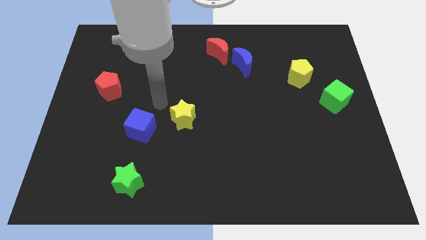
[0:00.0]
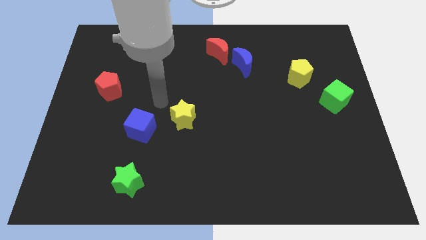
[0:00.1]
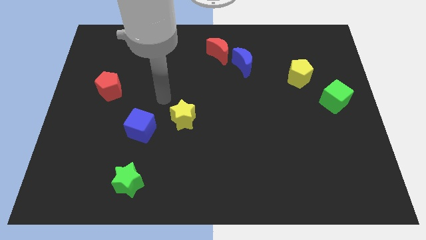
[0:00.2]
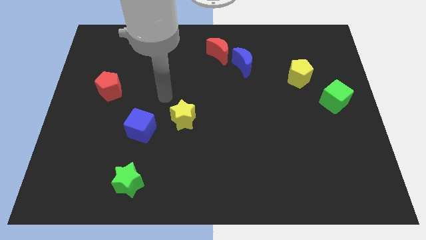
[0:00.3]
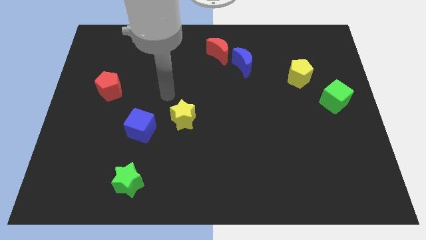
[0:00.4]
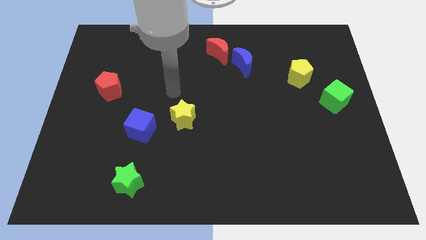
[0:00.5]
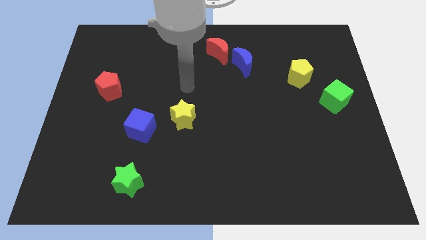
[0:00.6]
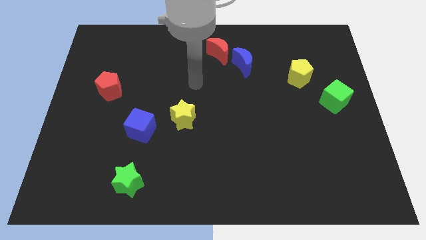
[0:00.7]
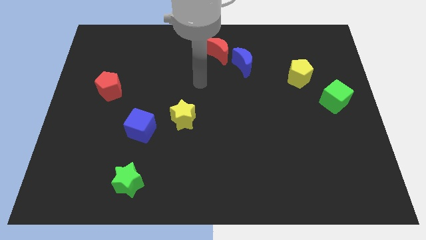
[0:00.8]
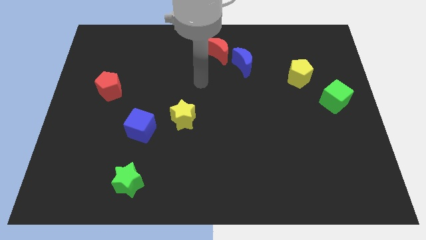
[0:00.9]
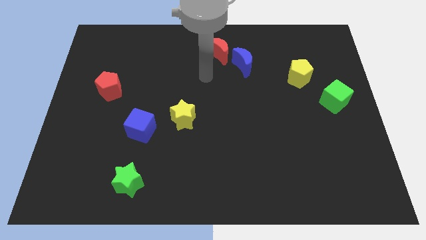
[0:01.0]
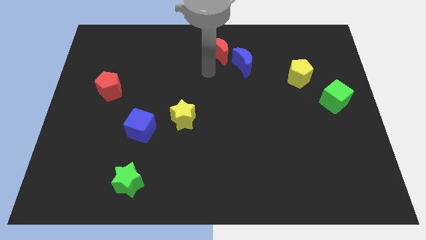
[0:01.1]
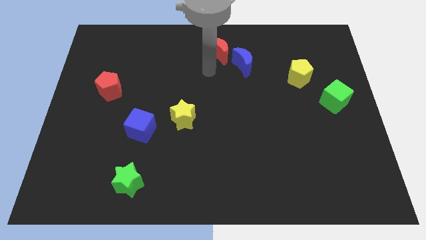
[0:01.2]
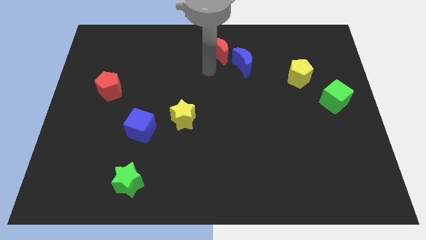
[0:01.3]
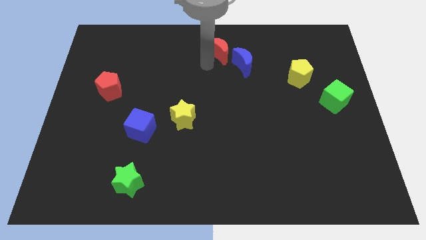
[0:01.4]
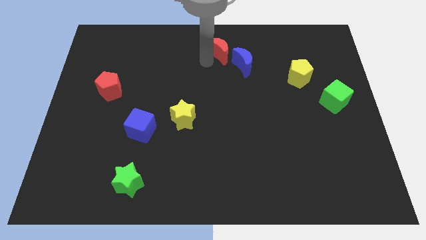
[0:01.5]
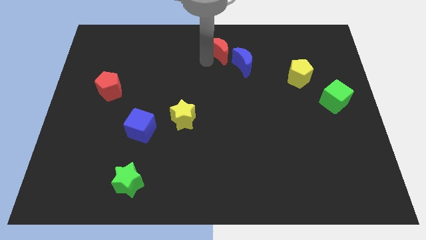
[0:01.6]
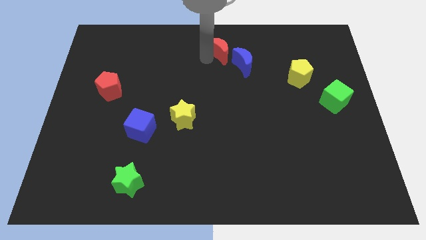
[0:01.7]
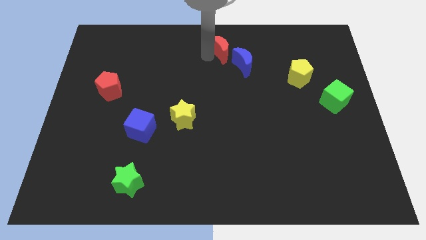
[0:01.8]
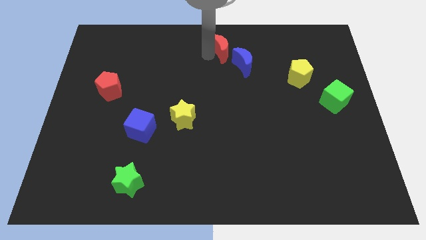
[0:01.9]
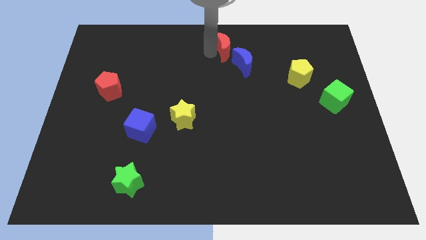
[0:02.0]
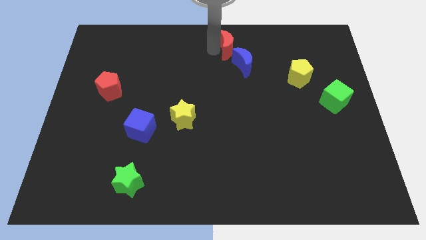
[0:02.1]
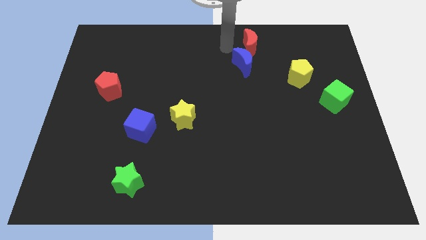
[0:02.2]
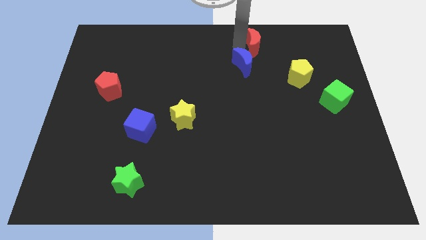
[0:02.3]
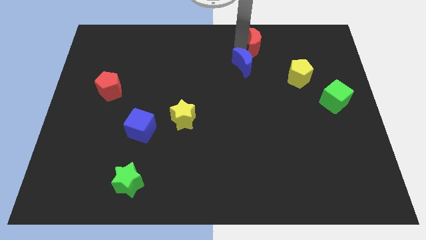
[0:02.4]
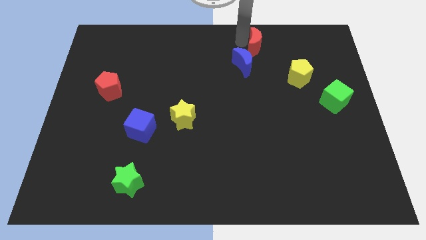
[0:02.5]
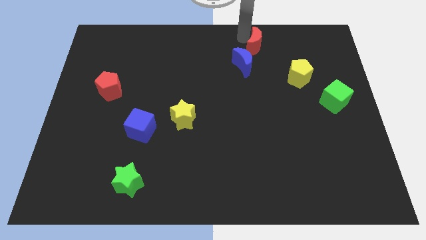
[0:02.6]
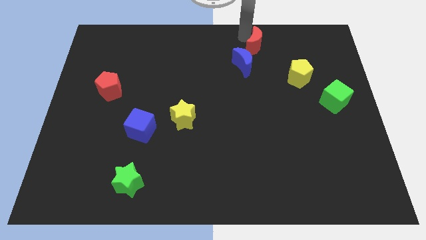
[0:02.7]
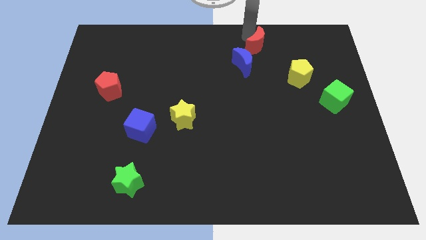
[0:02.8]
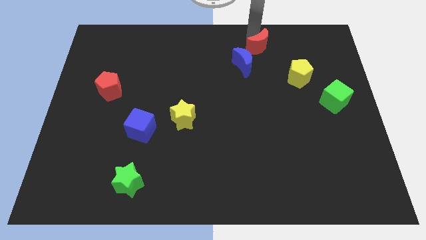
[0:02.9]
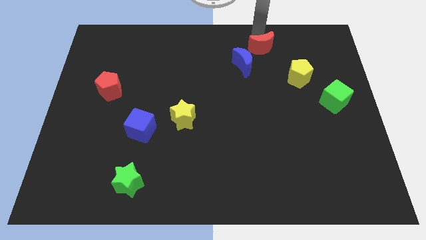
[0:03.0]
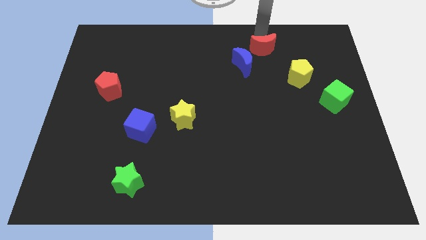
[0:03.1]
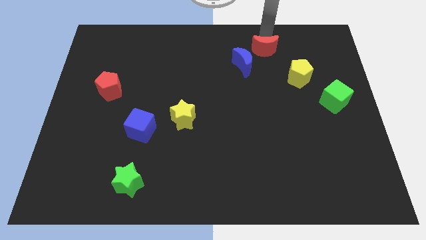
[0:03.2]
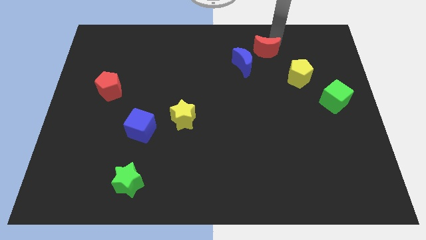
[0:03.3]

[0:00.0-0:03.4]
move the red crescent to the top right of the blue crescent

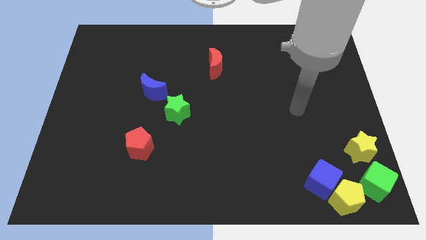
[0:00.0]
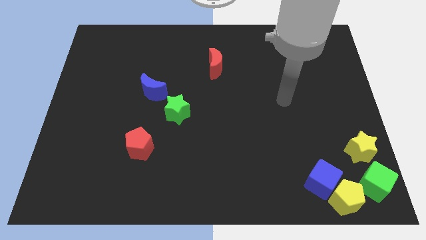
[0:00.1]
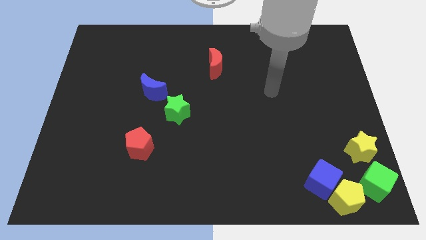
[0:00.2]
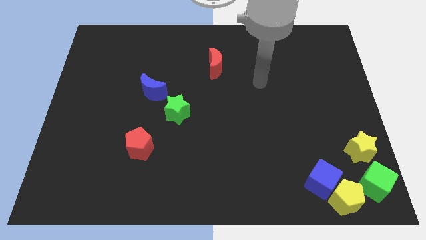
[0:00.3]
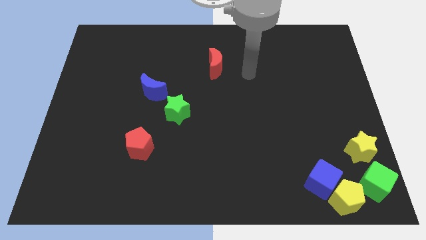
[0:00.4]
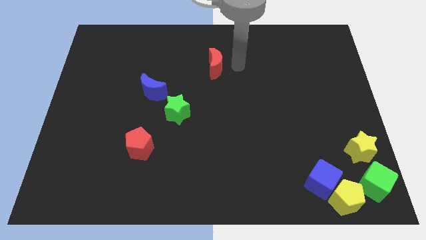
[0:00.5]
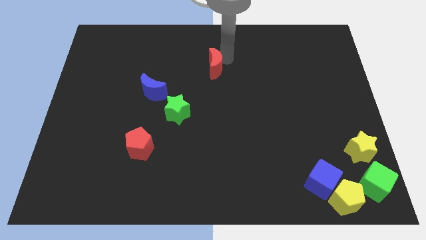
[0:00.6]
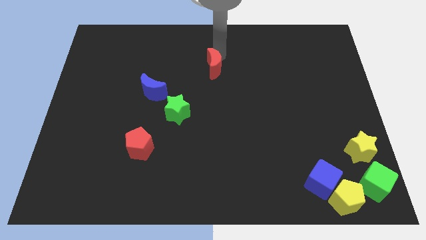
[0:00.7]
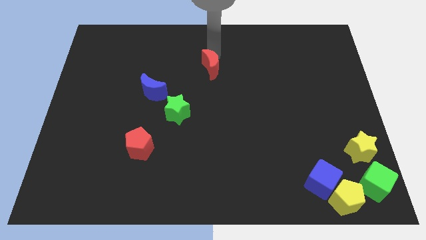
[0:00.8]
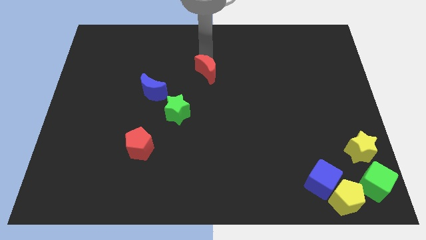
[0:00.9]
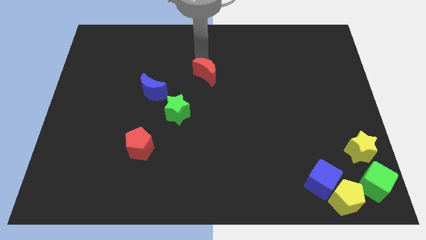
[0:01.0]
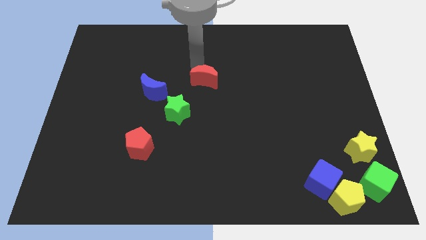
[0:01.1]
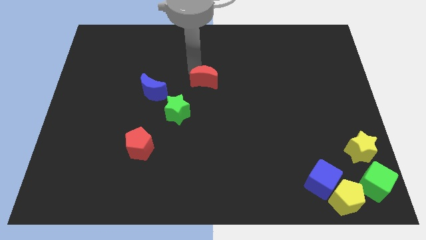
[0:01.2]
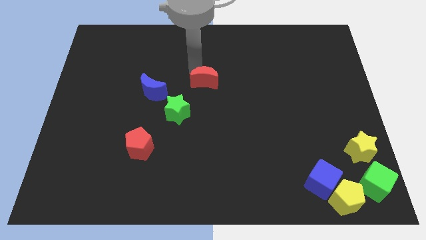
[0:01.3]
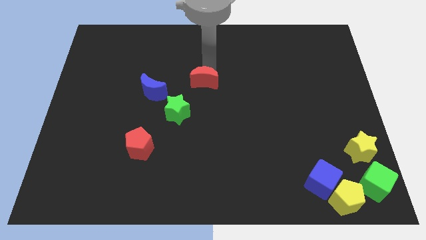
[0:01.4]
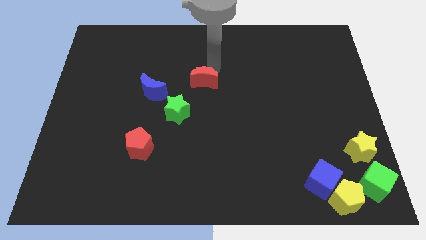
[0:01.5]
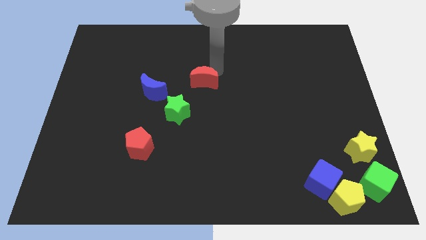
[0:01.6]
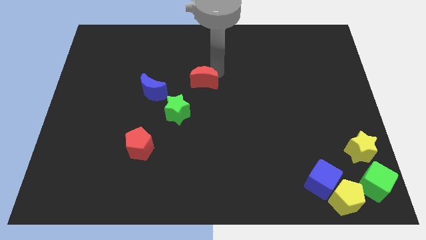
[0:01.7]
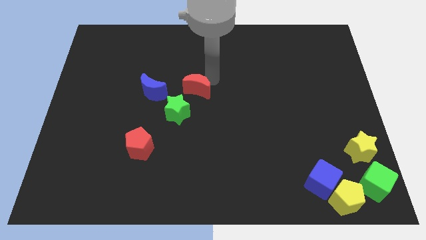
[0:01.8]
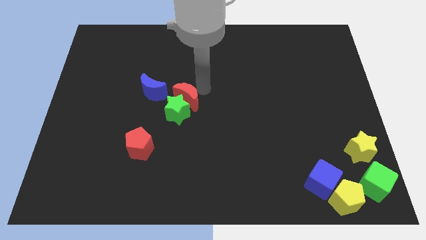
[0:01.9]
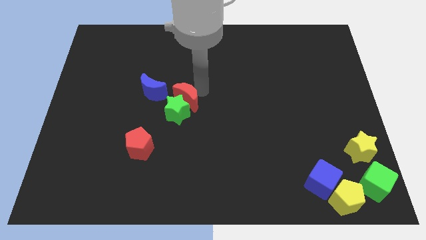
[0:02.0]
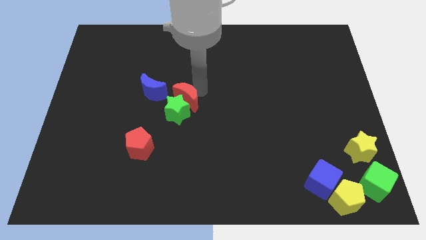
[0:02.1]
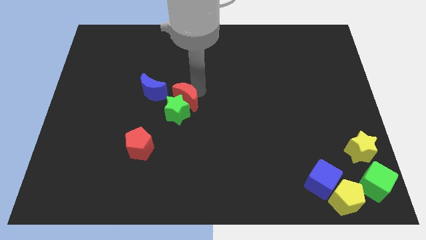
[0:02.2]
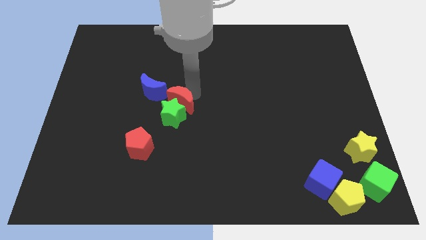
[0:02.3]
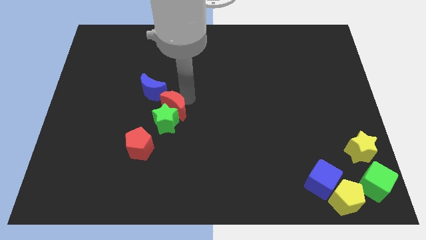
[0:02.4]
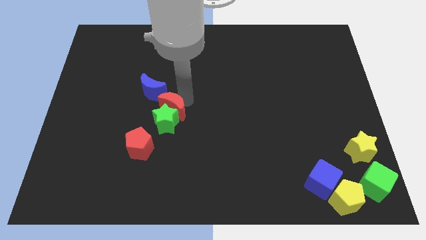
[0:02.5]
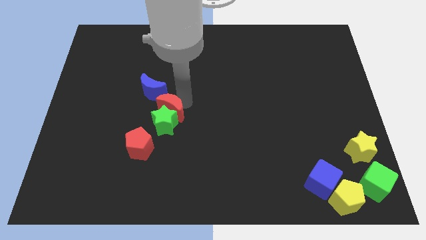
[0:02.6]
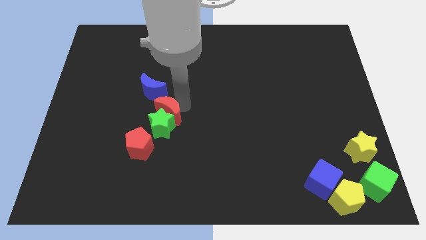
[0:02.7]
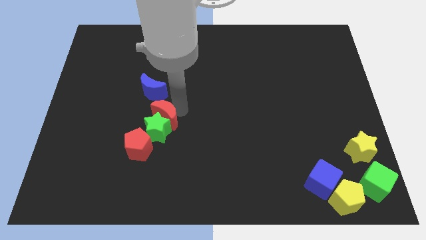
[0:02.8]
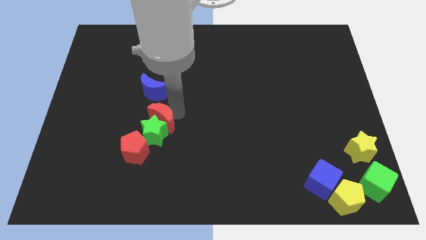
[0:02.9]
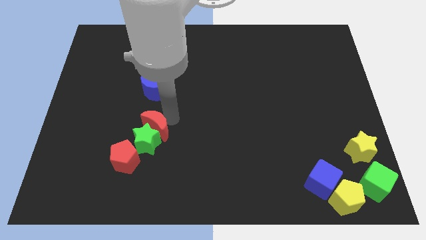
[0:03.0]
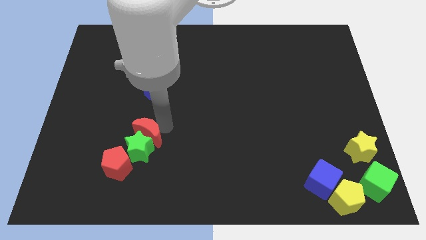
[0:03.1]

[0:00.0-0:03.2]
push red crescent below blue crescent

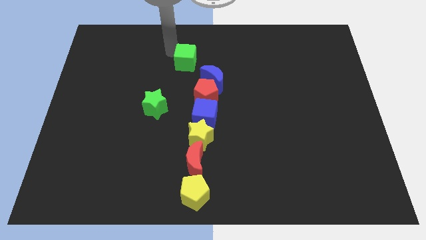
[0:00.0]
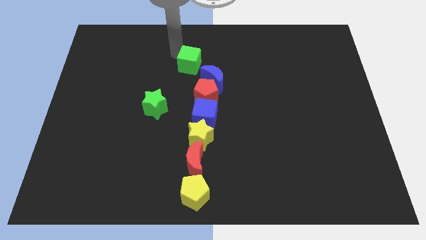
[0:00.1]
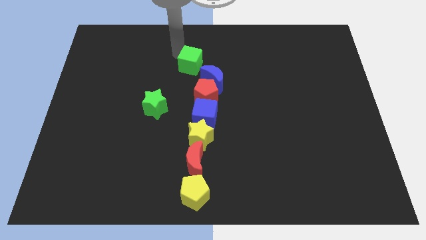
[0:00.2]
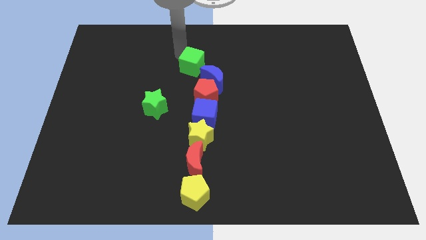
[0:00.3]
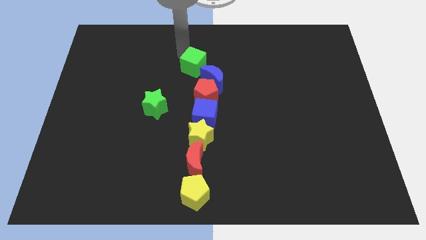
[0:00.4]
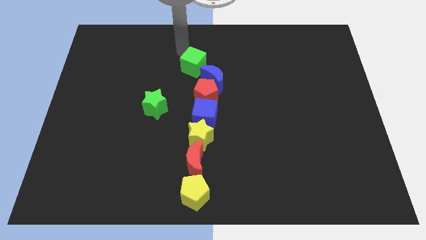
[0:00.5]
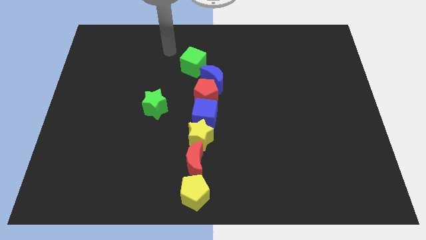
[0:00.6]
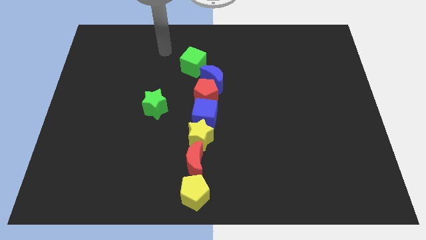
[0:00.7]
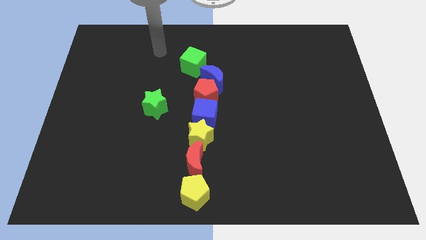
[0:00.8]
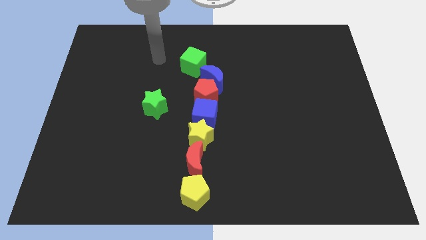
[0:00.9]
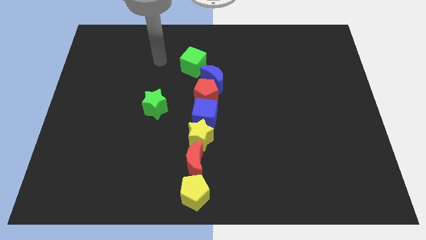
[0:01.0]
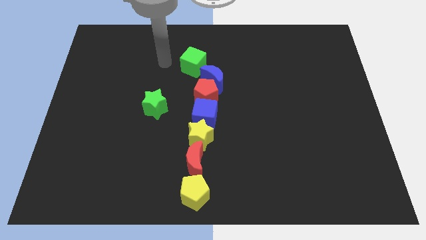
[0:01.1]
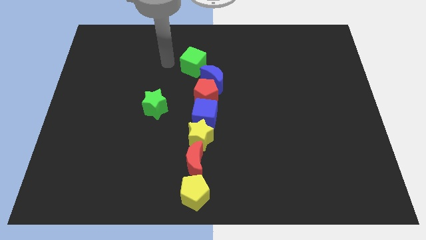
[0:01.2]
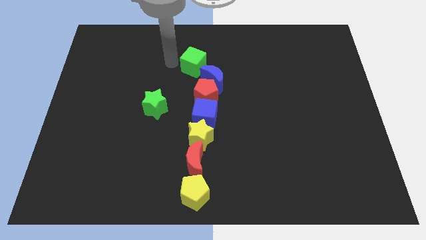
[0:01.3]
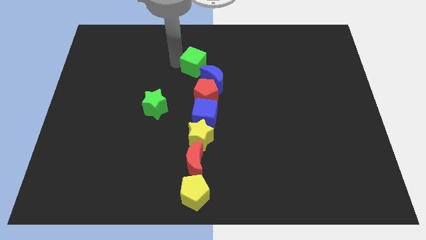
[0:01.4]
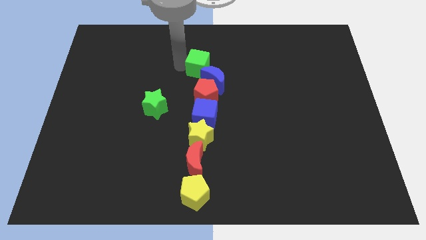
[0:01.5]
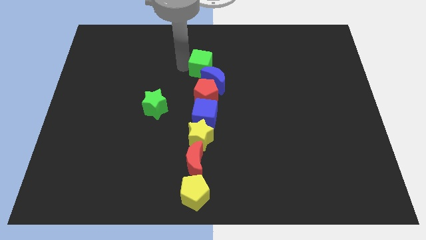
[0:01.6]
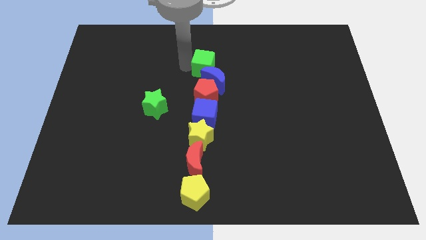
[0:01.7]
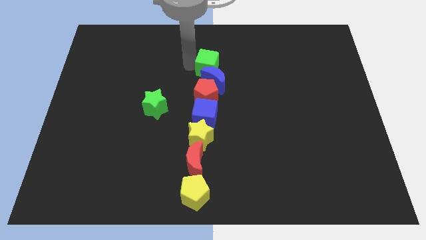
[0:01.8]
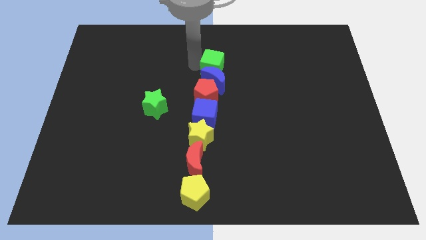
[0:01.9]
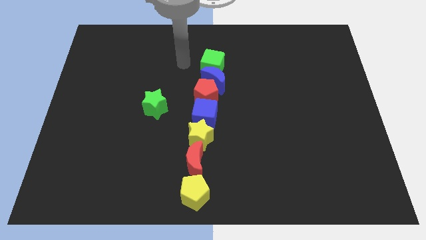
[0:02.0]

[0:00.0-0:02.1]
place the green cube to the top of blue crescent

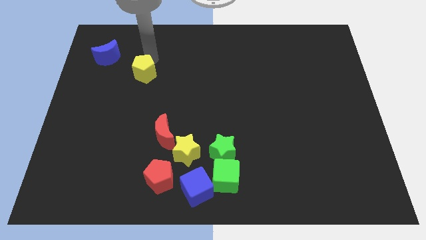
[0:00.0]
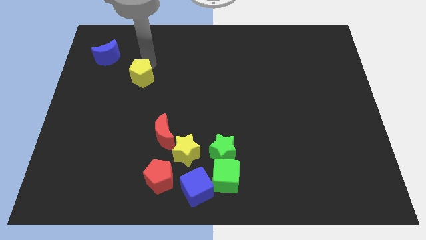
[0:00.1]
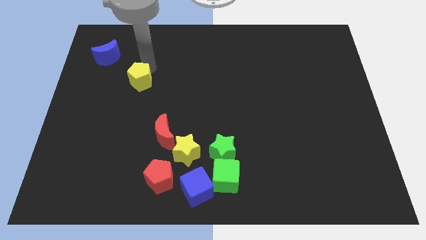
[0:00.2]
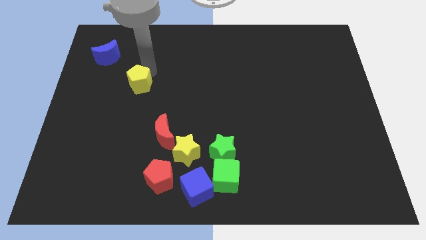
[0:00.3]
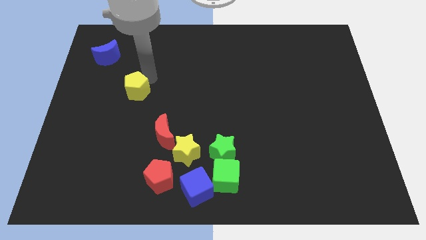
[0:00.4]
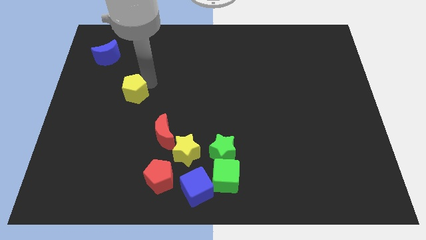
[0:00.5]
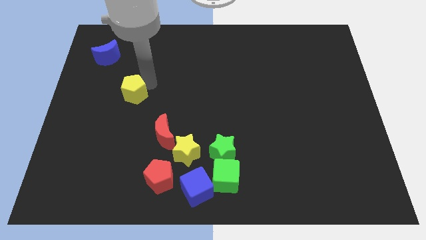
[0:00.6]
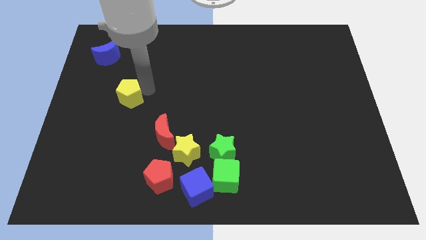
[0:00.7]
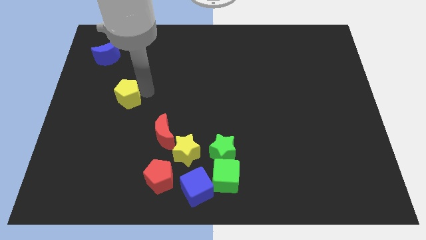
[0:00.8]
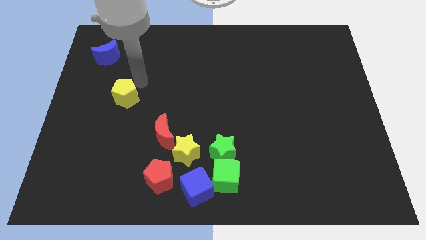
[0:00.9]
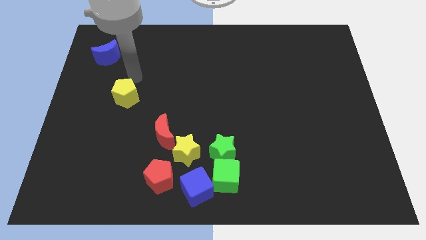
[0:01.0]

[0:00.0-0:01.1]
move the yellow pentagon to the center left of the board
